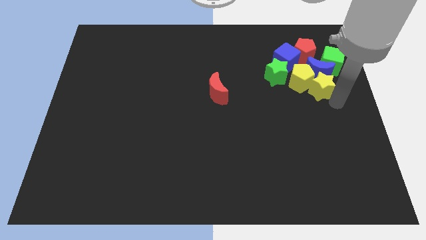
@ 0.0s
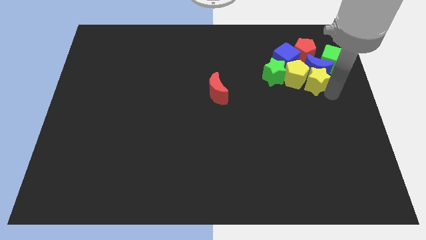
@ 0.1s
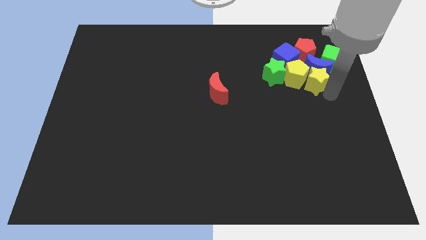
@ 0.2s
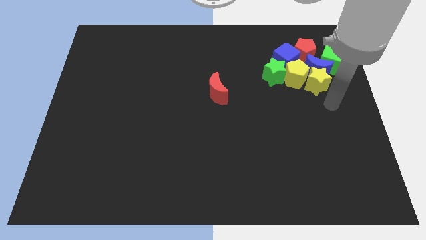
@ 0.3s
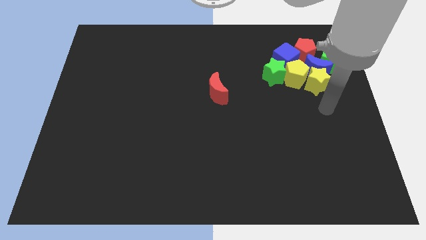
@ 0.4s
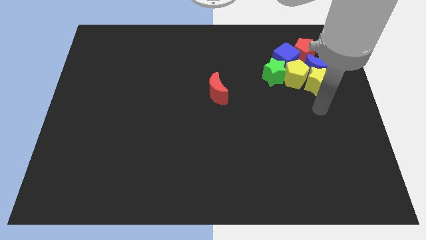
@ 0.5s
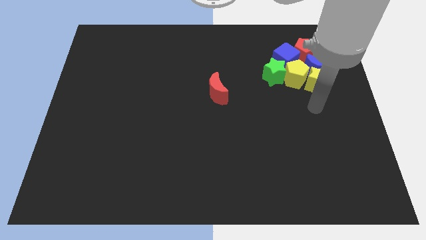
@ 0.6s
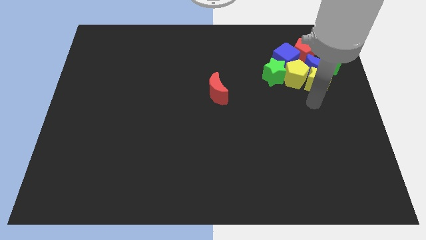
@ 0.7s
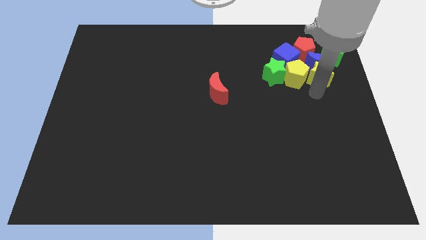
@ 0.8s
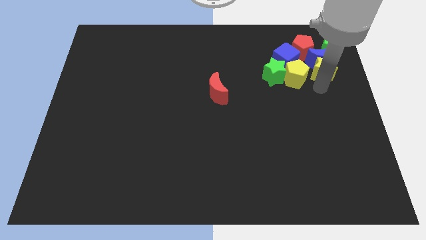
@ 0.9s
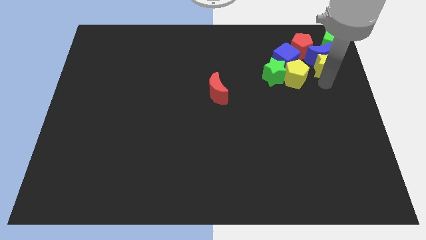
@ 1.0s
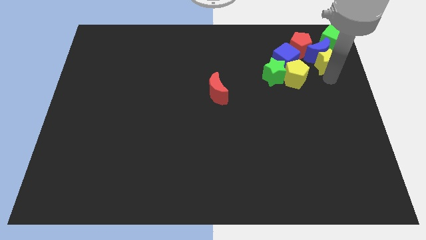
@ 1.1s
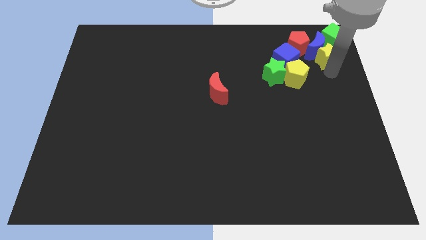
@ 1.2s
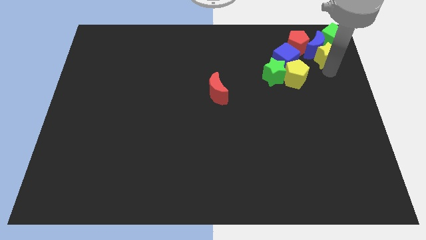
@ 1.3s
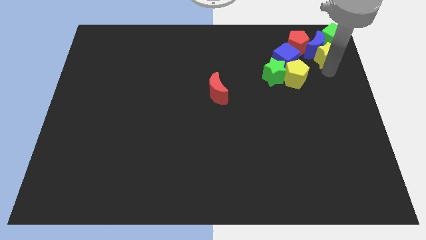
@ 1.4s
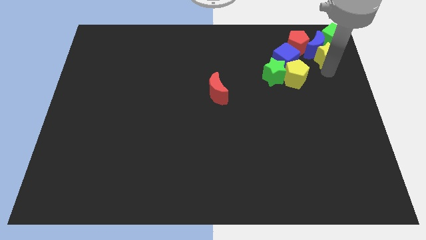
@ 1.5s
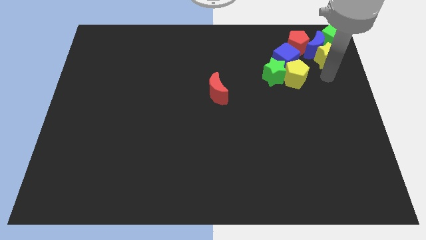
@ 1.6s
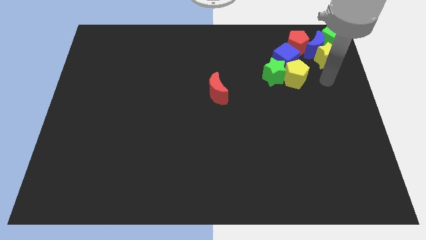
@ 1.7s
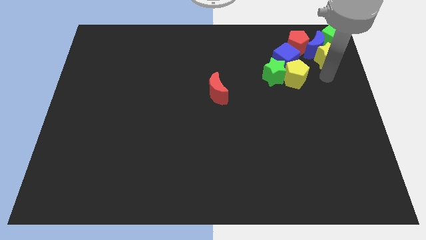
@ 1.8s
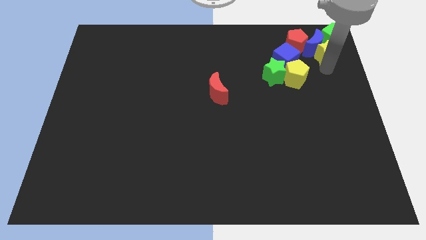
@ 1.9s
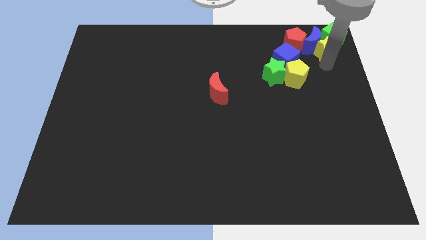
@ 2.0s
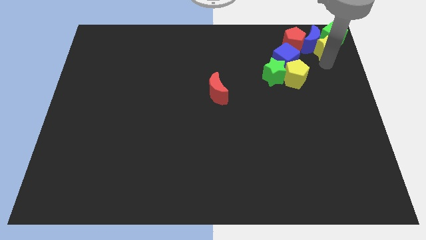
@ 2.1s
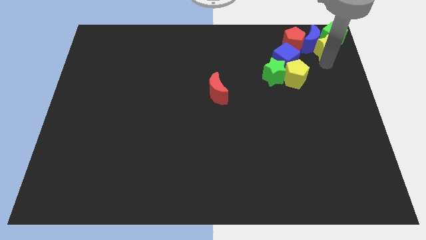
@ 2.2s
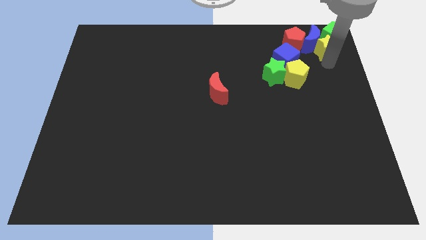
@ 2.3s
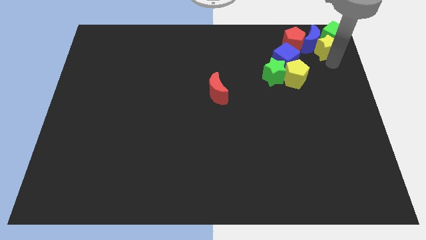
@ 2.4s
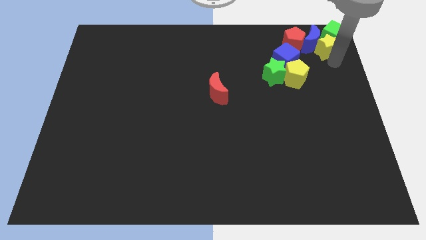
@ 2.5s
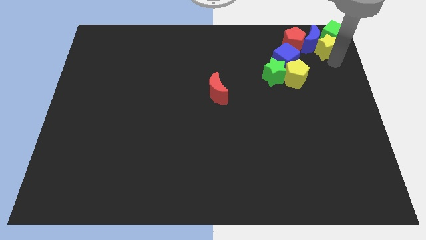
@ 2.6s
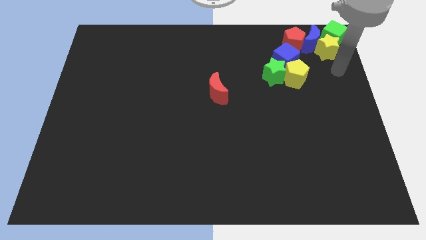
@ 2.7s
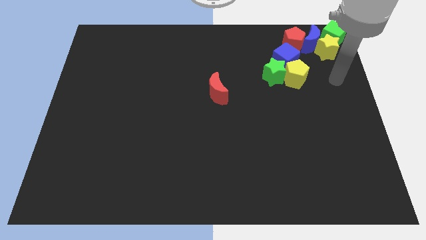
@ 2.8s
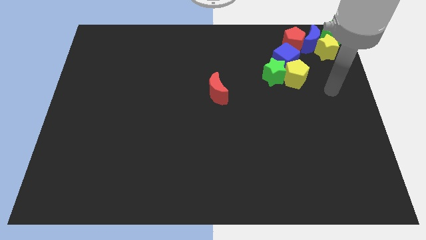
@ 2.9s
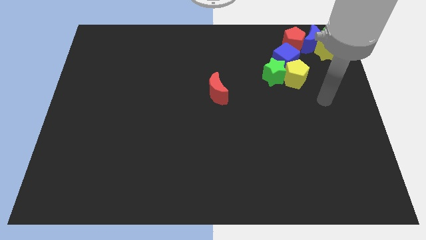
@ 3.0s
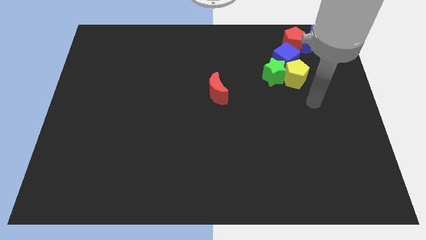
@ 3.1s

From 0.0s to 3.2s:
move yellow star into green cube

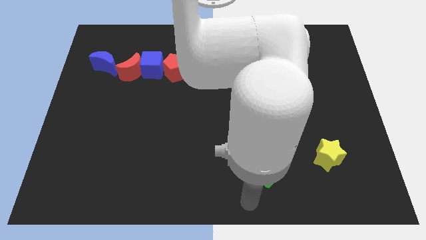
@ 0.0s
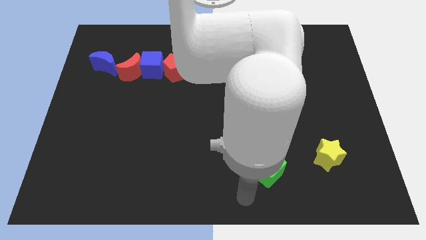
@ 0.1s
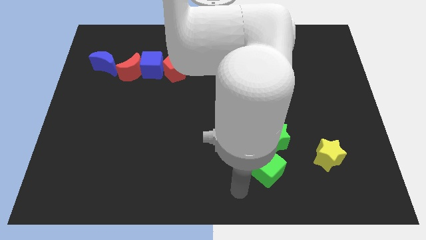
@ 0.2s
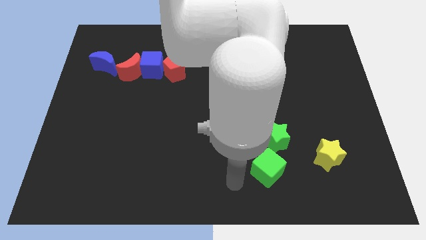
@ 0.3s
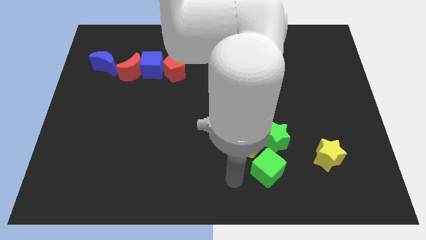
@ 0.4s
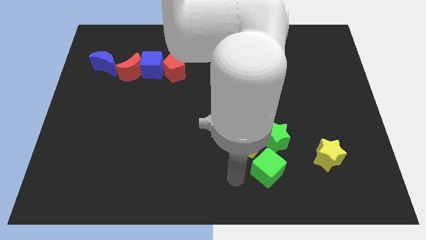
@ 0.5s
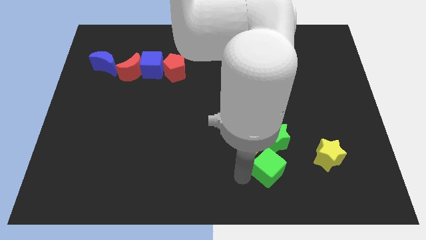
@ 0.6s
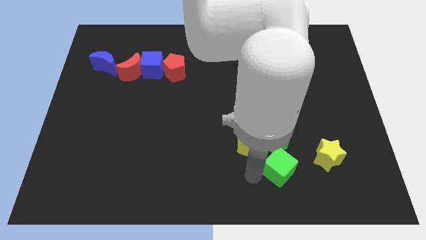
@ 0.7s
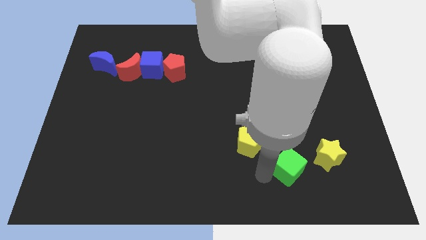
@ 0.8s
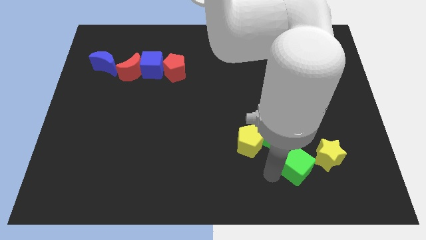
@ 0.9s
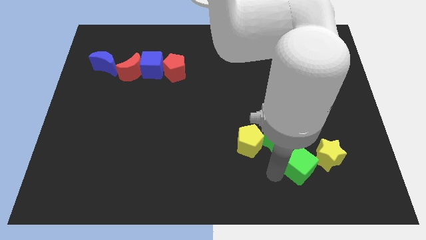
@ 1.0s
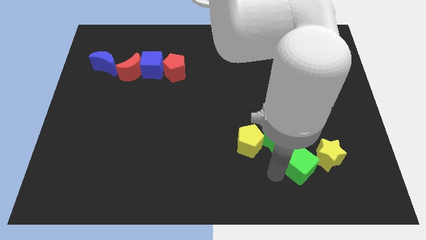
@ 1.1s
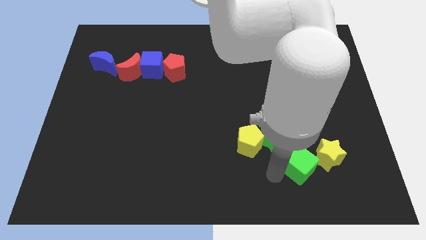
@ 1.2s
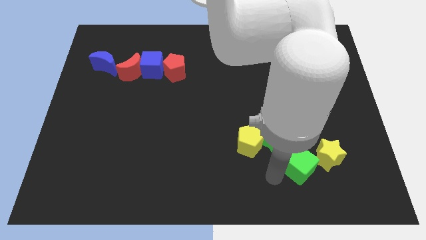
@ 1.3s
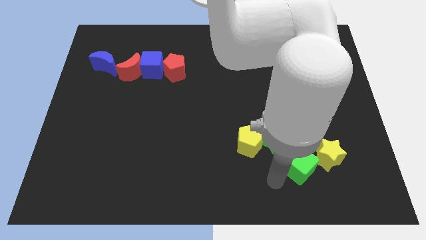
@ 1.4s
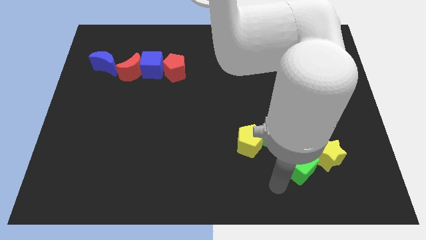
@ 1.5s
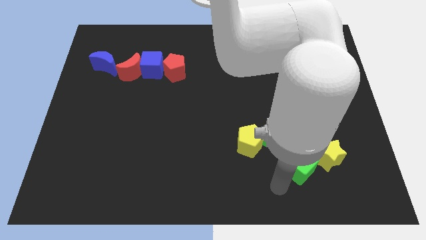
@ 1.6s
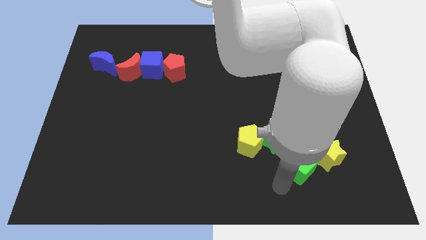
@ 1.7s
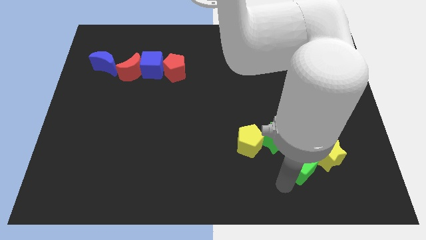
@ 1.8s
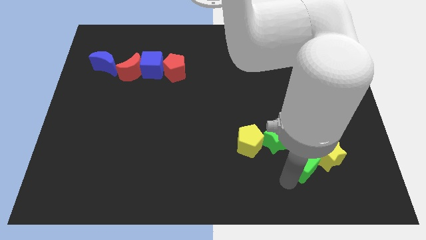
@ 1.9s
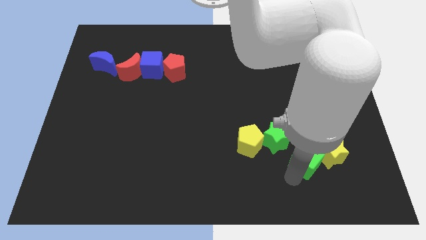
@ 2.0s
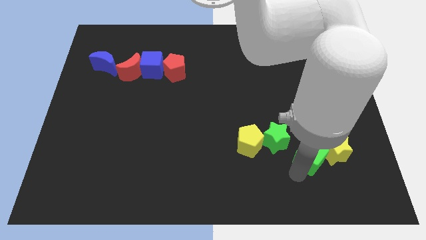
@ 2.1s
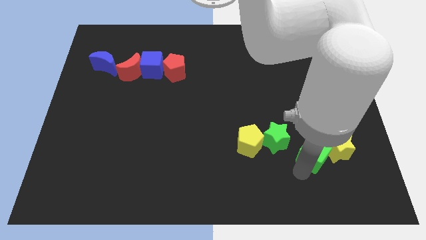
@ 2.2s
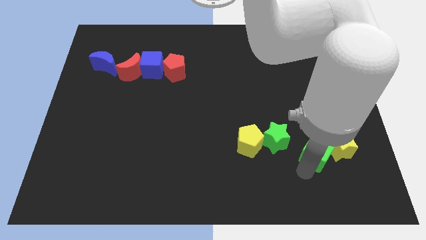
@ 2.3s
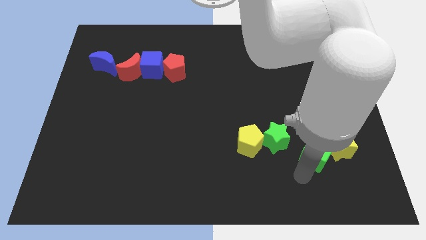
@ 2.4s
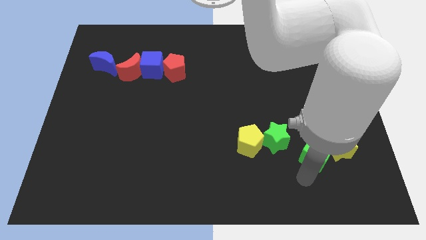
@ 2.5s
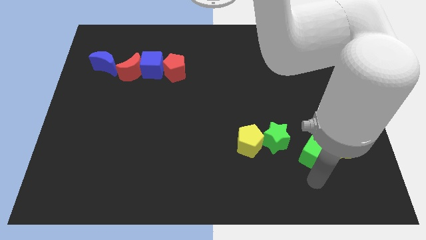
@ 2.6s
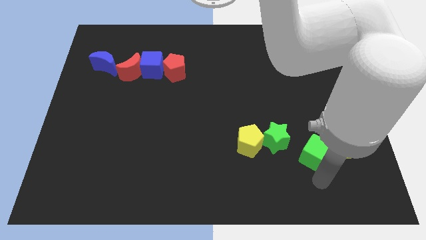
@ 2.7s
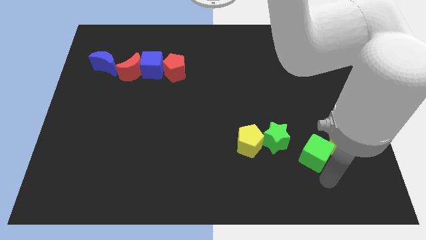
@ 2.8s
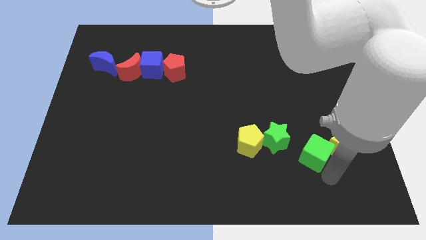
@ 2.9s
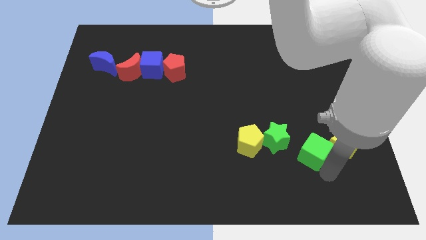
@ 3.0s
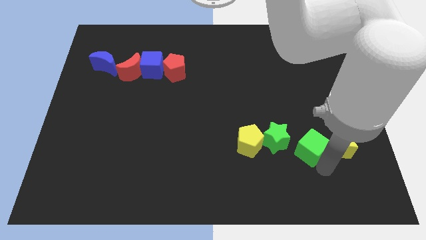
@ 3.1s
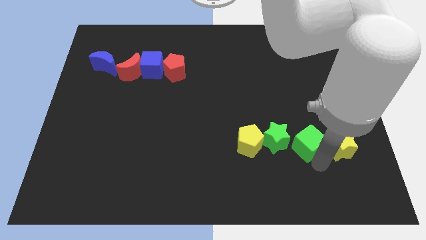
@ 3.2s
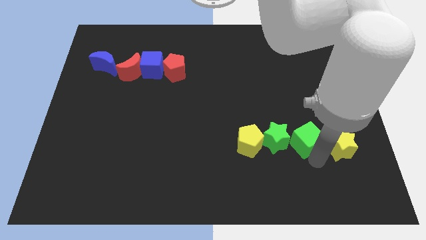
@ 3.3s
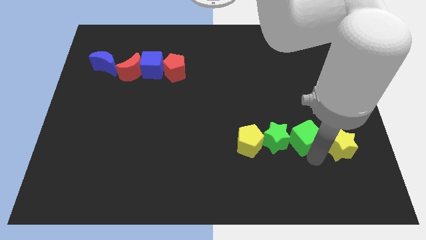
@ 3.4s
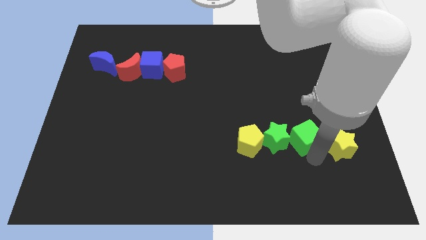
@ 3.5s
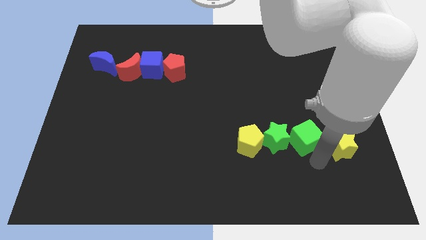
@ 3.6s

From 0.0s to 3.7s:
place the green cube in between the yellow star and green star

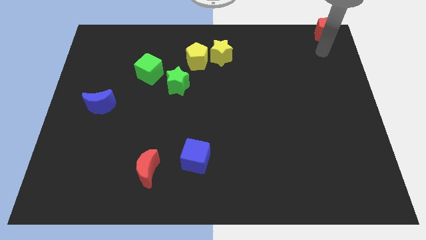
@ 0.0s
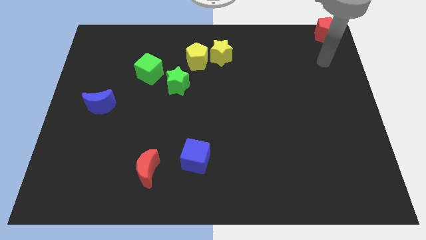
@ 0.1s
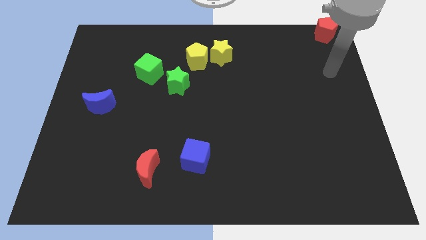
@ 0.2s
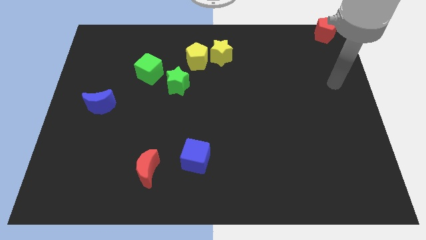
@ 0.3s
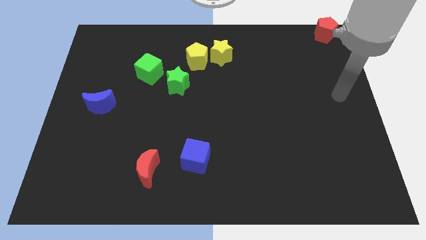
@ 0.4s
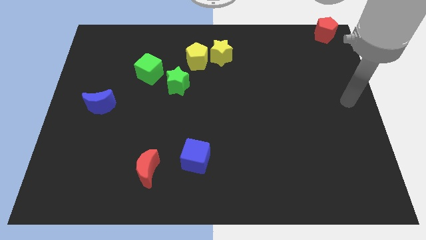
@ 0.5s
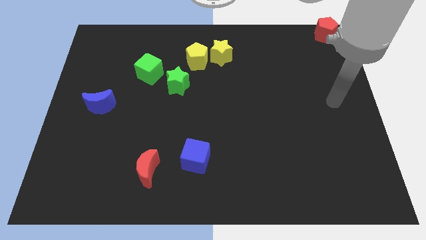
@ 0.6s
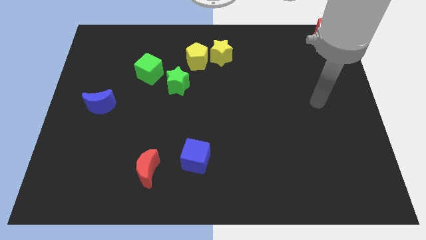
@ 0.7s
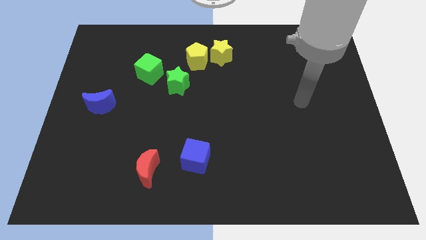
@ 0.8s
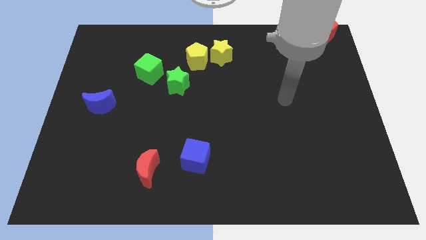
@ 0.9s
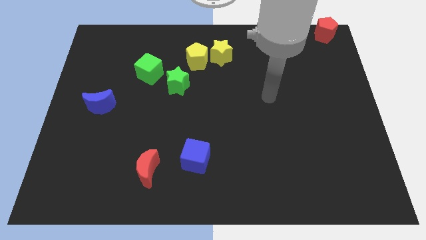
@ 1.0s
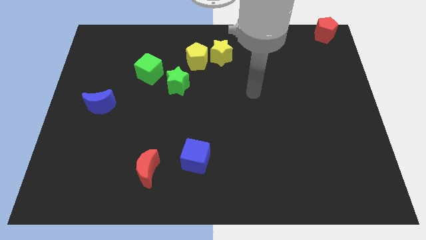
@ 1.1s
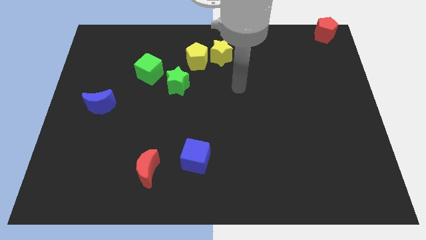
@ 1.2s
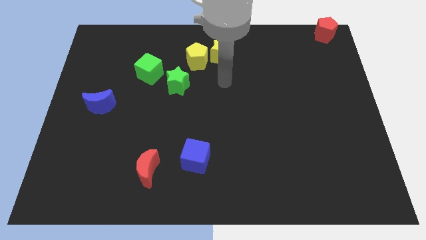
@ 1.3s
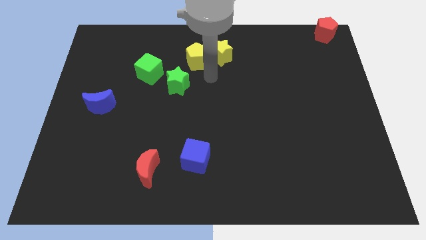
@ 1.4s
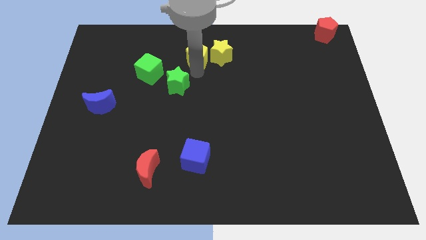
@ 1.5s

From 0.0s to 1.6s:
place your hand under the yellow blocks

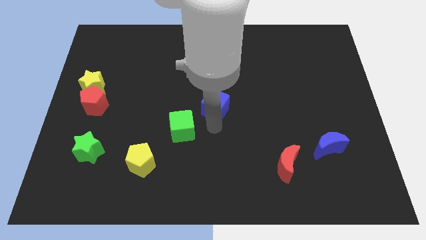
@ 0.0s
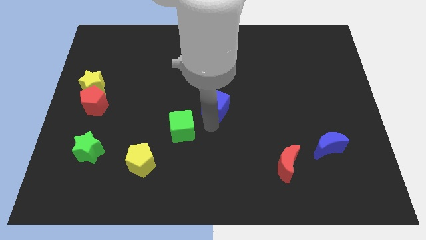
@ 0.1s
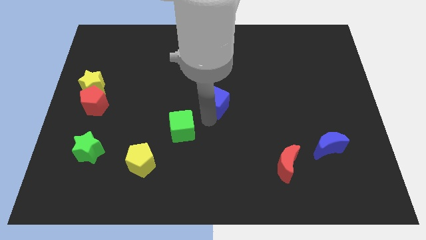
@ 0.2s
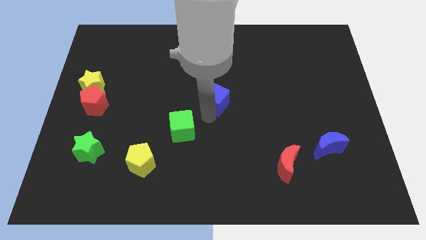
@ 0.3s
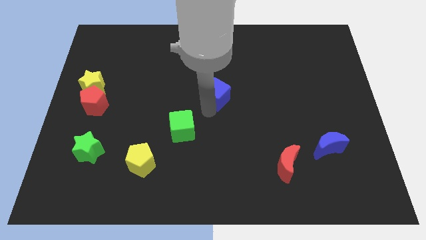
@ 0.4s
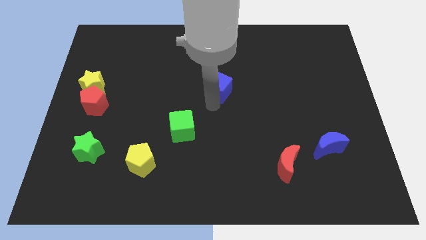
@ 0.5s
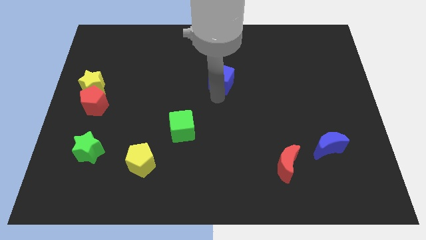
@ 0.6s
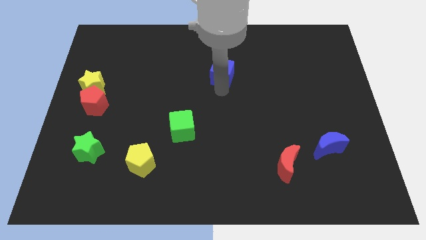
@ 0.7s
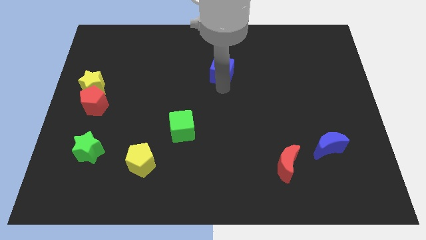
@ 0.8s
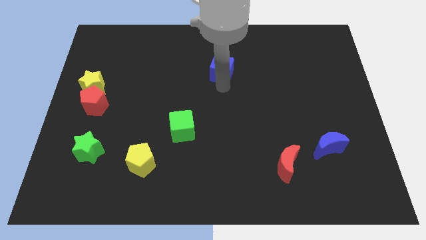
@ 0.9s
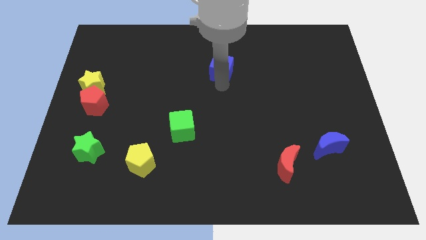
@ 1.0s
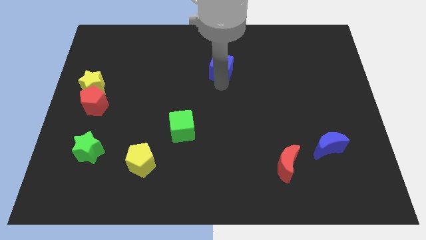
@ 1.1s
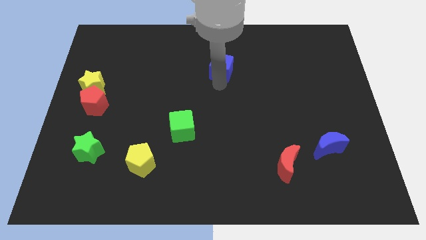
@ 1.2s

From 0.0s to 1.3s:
push blue moon upwards
